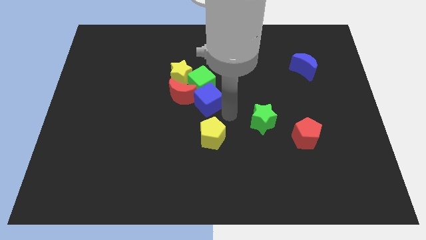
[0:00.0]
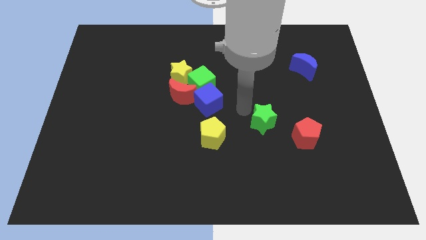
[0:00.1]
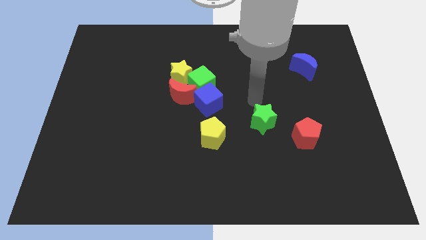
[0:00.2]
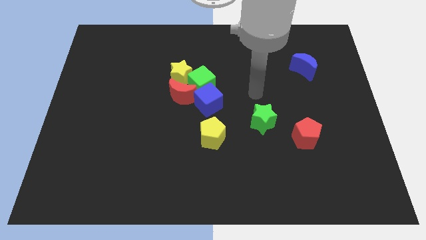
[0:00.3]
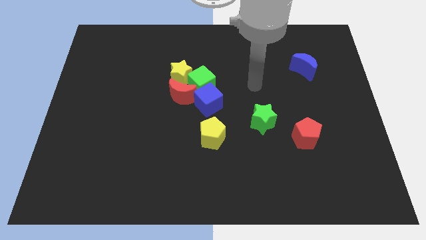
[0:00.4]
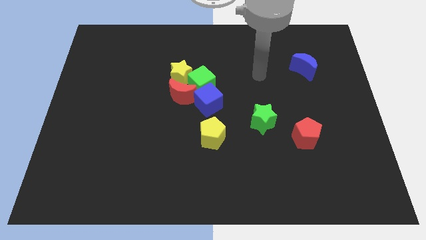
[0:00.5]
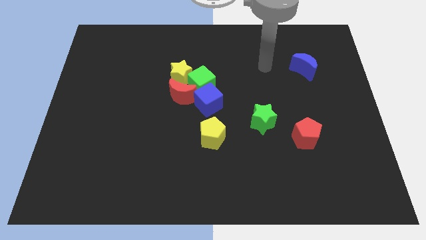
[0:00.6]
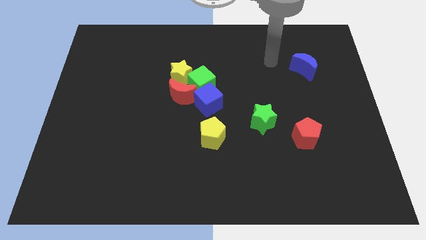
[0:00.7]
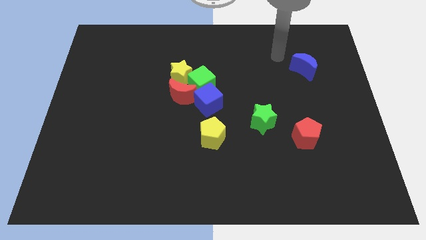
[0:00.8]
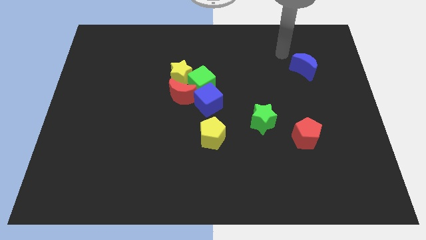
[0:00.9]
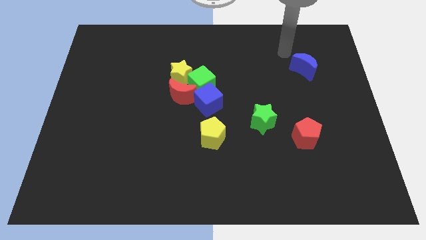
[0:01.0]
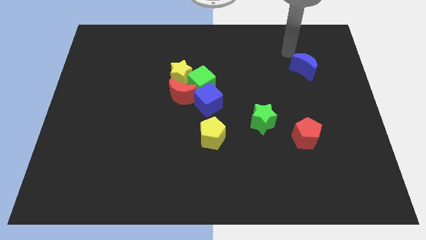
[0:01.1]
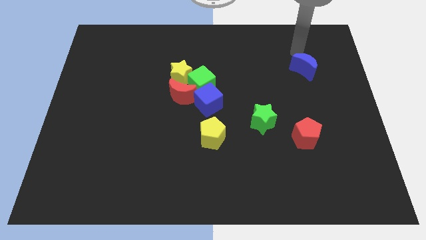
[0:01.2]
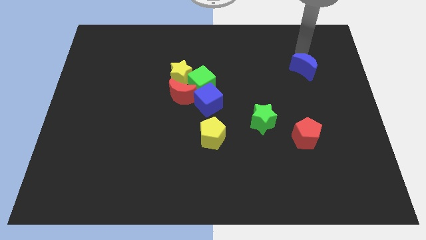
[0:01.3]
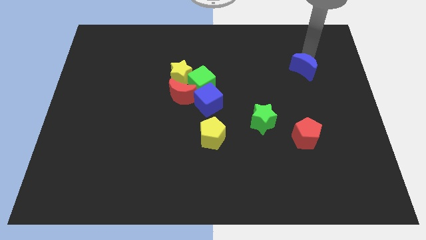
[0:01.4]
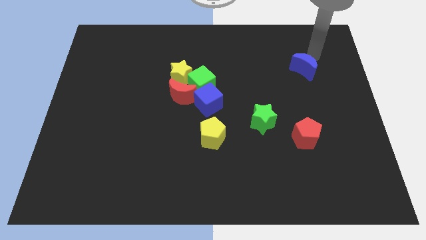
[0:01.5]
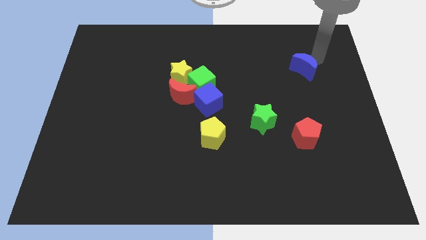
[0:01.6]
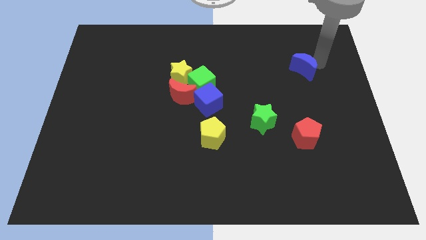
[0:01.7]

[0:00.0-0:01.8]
place your arm at the top side of the blue moon

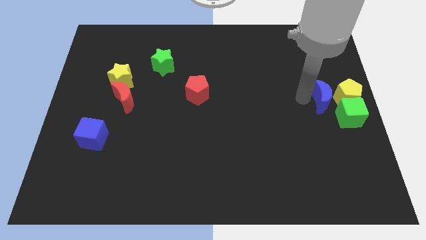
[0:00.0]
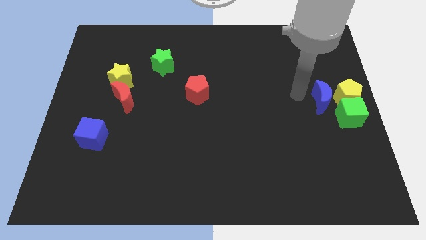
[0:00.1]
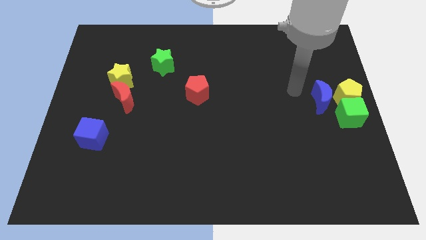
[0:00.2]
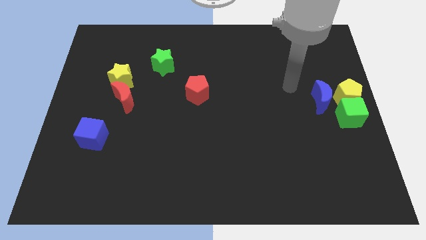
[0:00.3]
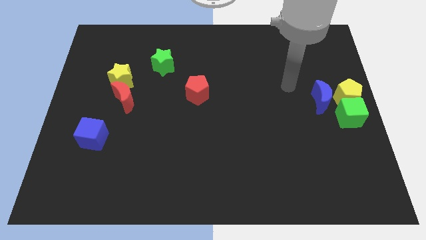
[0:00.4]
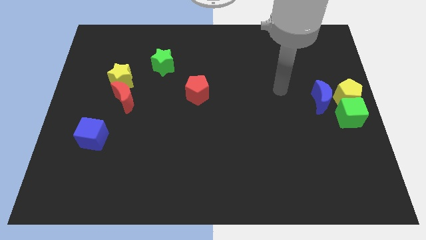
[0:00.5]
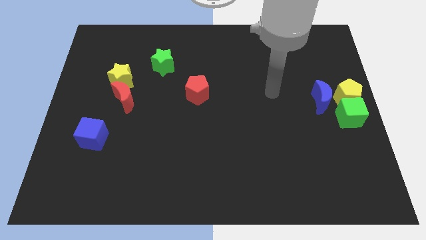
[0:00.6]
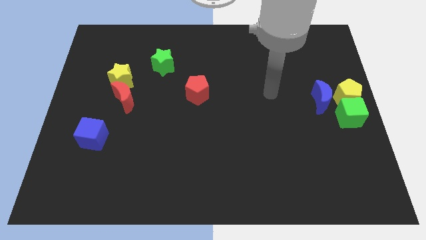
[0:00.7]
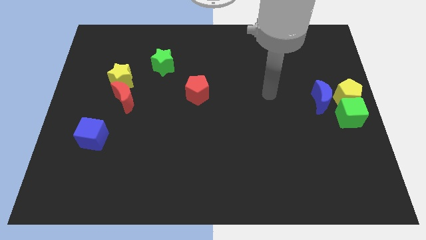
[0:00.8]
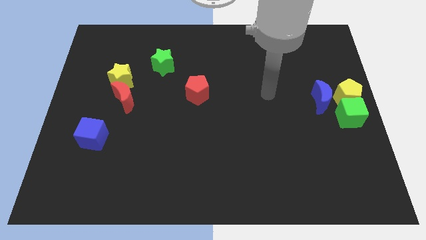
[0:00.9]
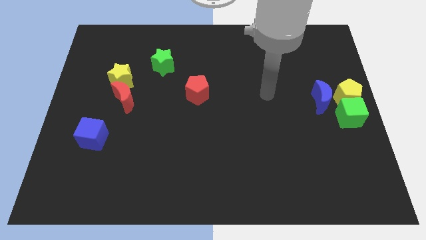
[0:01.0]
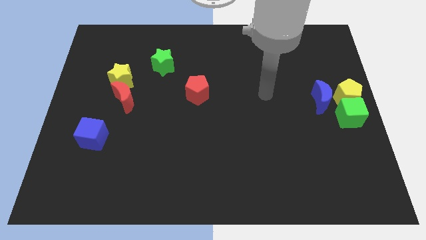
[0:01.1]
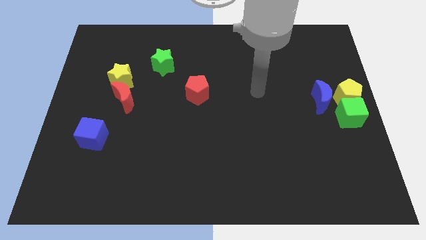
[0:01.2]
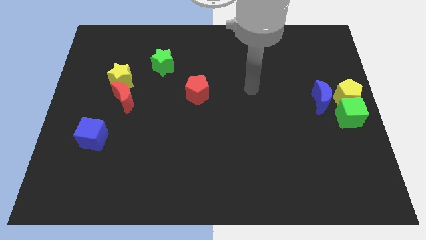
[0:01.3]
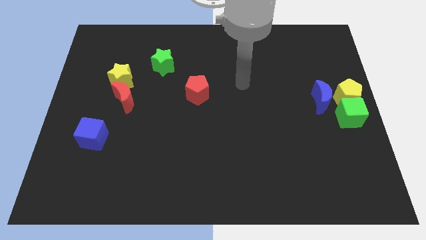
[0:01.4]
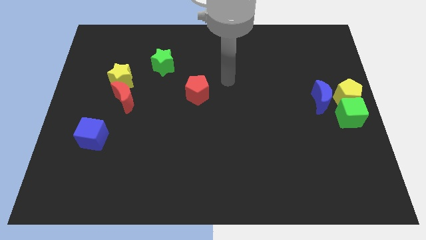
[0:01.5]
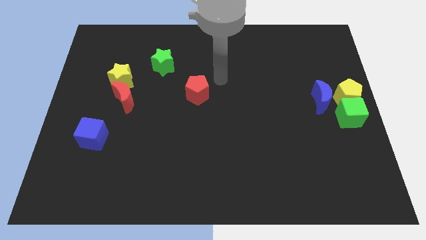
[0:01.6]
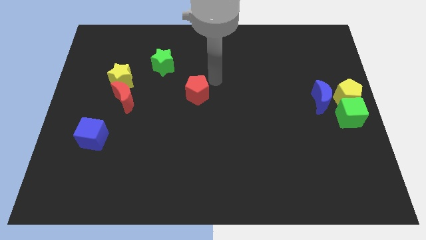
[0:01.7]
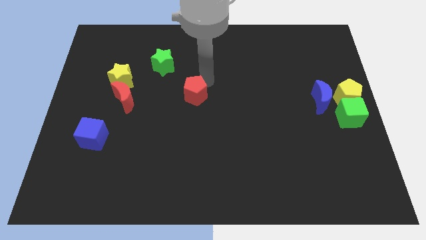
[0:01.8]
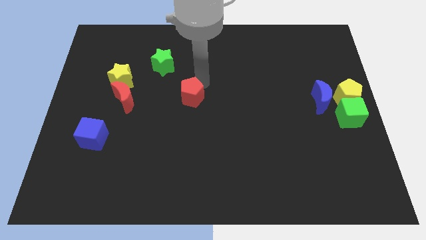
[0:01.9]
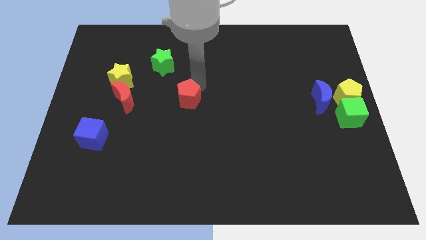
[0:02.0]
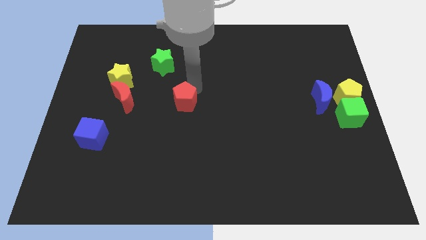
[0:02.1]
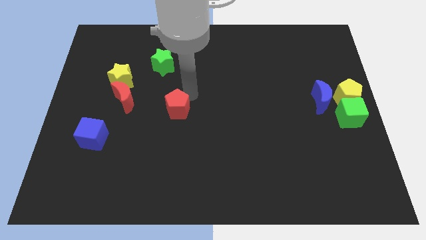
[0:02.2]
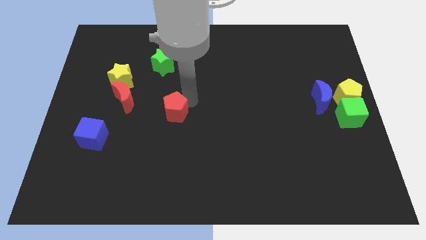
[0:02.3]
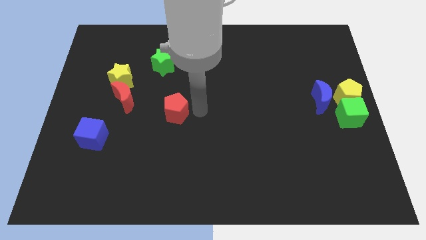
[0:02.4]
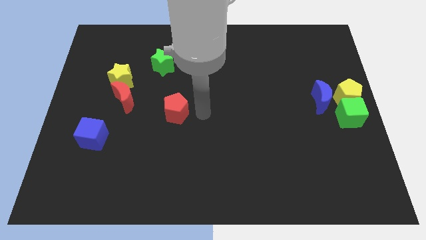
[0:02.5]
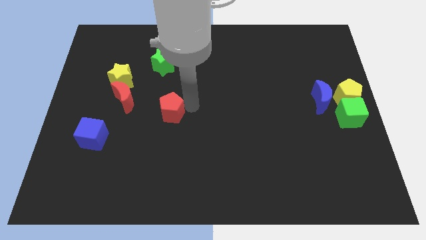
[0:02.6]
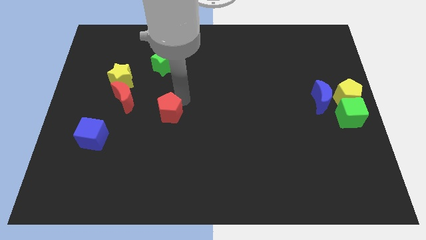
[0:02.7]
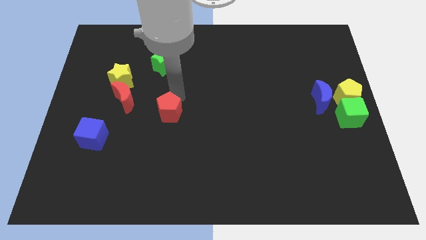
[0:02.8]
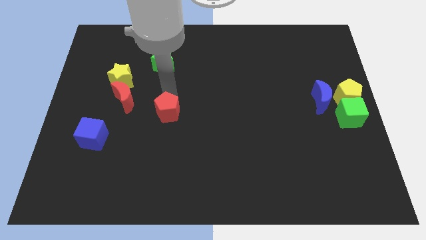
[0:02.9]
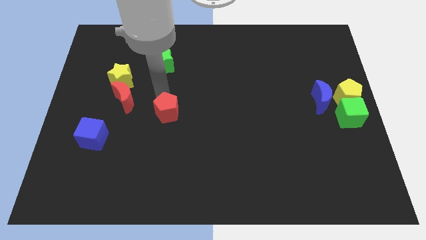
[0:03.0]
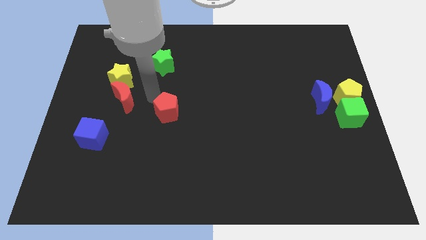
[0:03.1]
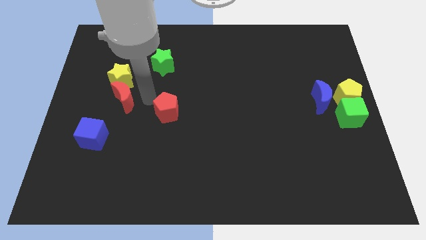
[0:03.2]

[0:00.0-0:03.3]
slightly push the red pentagon downwards of the board

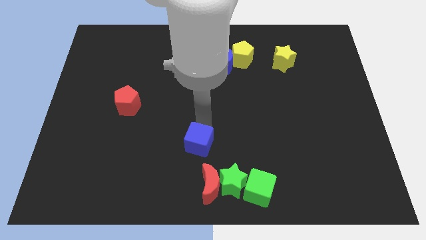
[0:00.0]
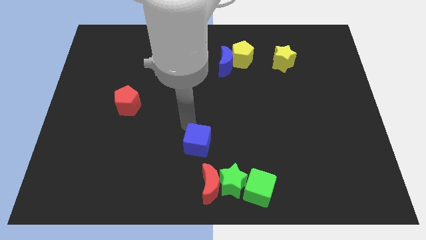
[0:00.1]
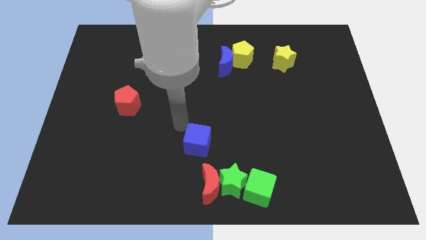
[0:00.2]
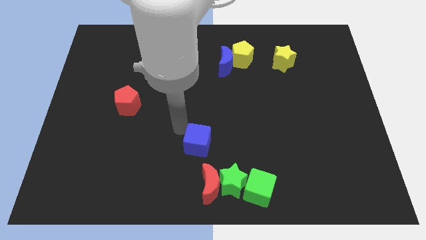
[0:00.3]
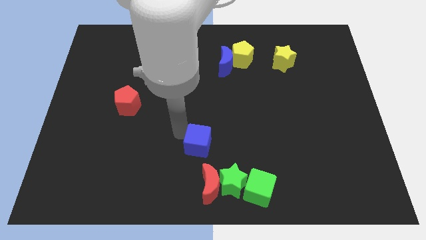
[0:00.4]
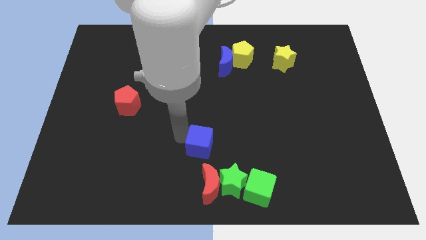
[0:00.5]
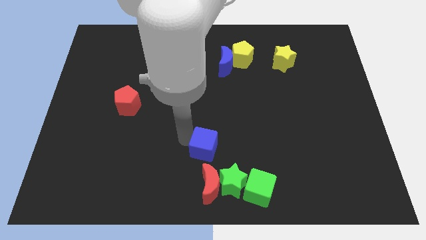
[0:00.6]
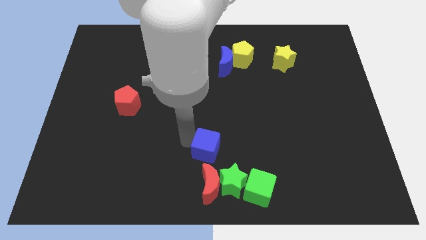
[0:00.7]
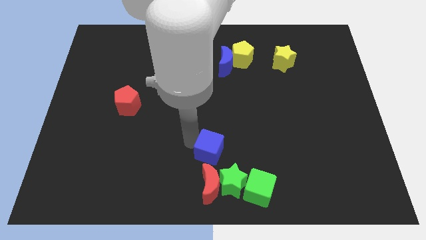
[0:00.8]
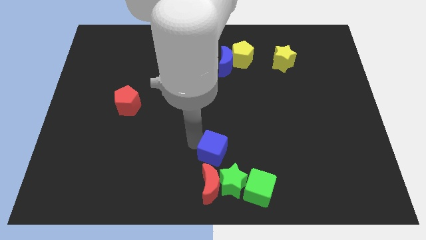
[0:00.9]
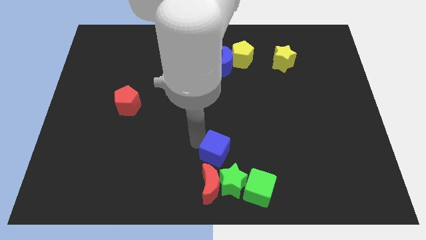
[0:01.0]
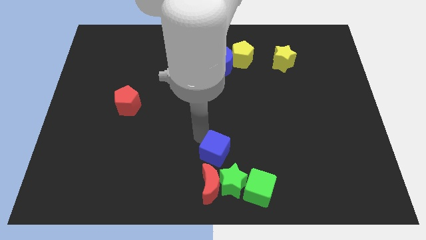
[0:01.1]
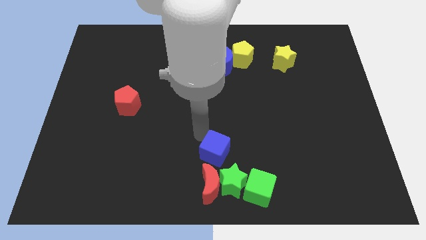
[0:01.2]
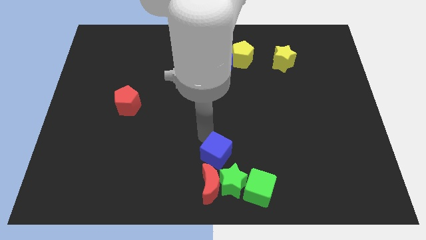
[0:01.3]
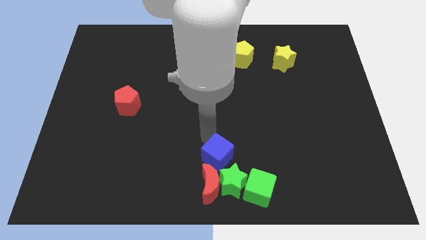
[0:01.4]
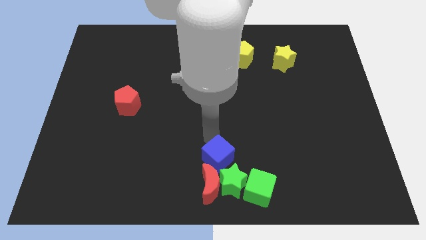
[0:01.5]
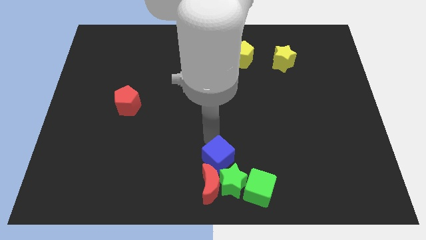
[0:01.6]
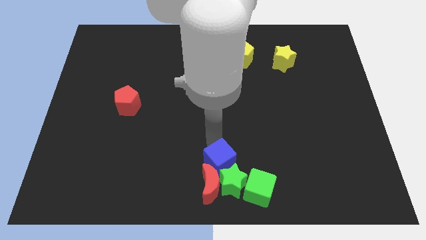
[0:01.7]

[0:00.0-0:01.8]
move the blue cube into the green star

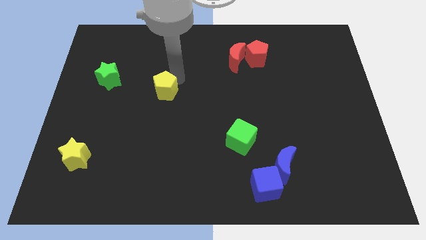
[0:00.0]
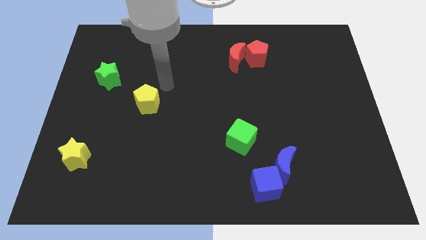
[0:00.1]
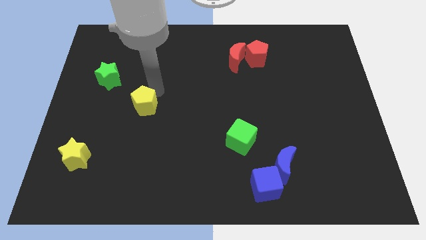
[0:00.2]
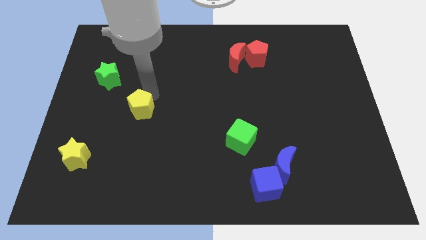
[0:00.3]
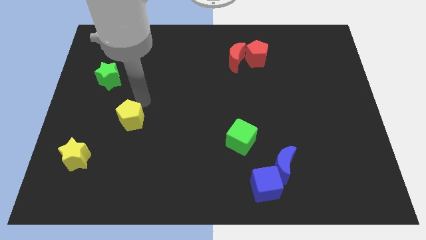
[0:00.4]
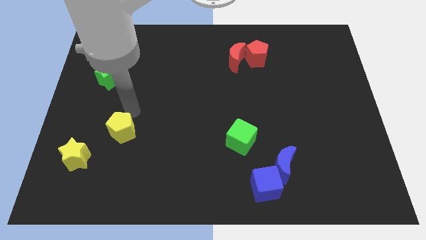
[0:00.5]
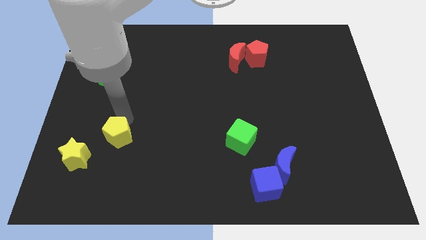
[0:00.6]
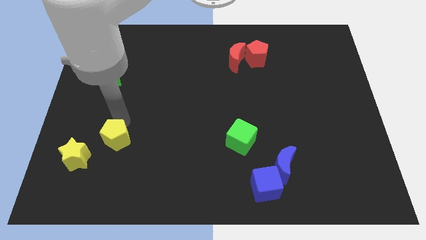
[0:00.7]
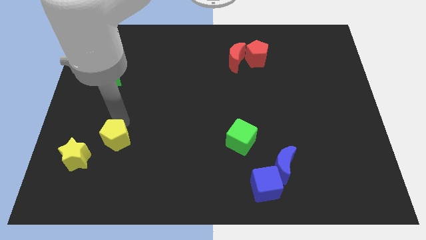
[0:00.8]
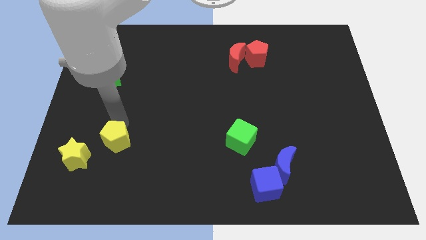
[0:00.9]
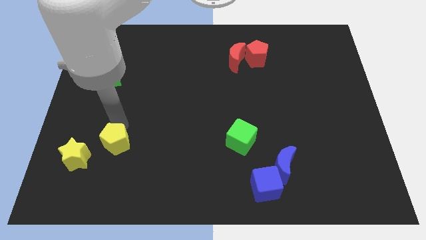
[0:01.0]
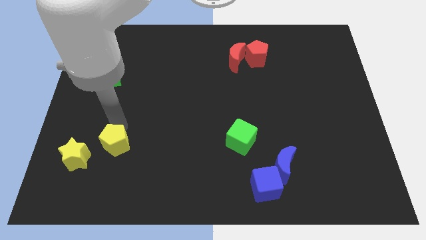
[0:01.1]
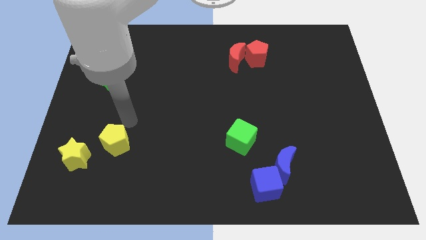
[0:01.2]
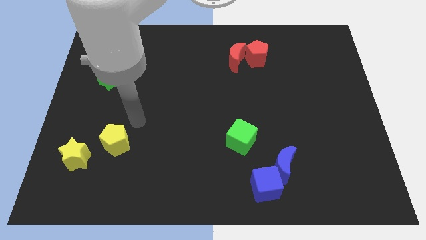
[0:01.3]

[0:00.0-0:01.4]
push the yellow pentagon towards the yellow star

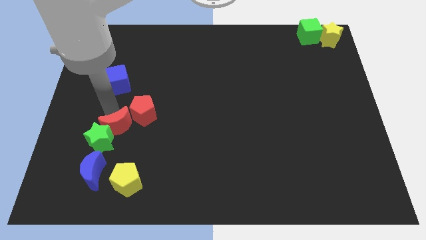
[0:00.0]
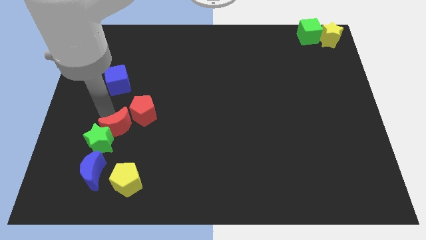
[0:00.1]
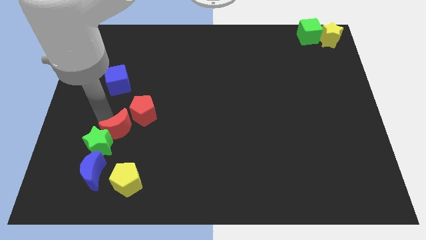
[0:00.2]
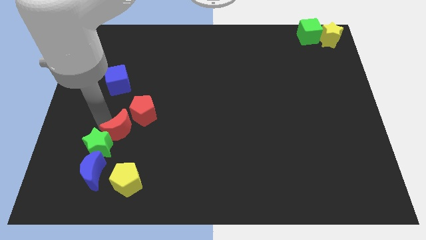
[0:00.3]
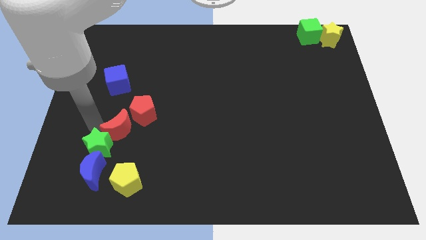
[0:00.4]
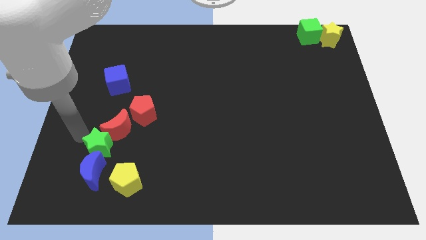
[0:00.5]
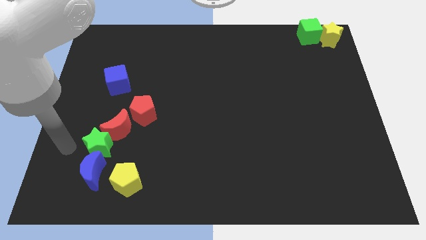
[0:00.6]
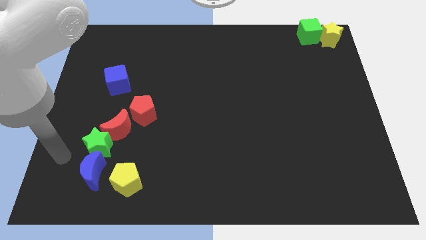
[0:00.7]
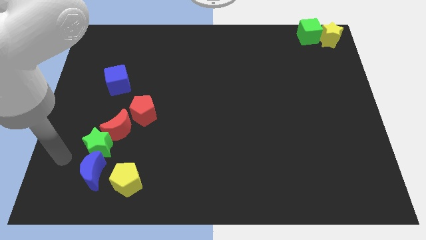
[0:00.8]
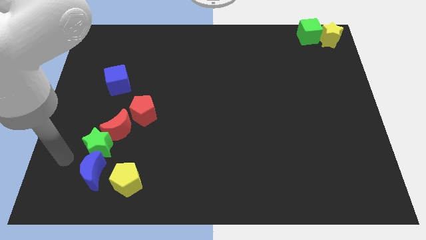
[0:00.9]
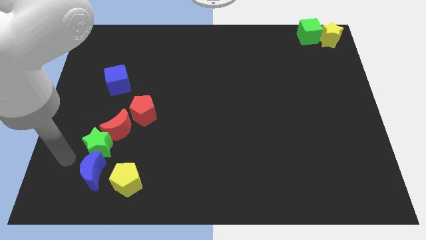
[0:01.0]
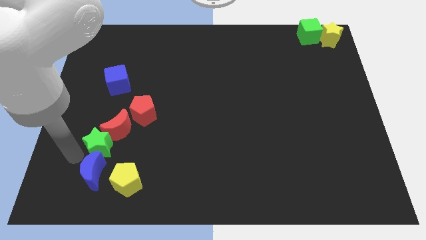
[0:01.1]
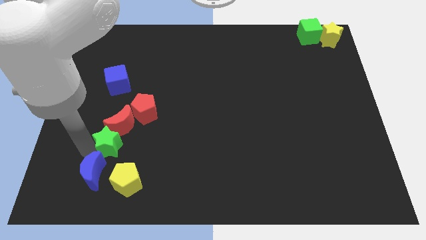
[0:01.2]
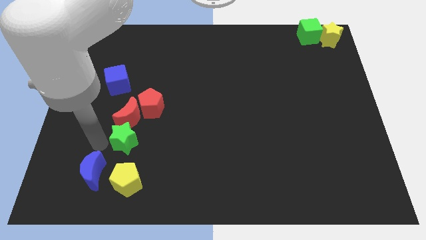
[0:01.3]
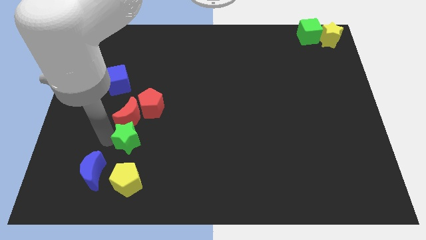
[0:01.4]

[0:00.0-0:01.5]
push the green star to the bottom of the red moon
